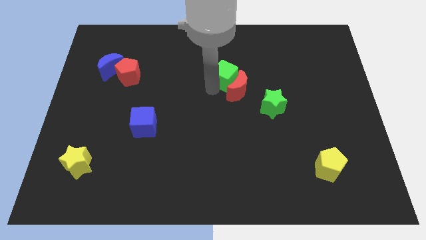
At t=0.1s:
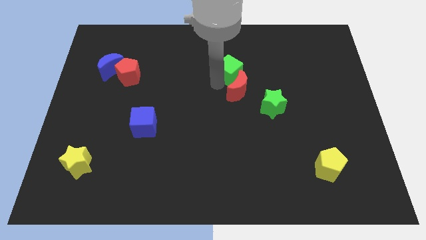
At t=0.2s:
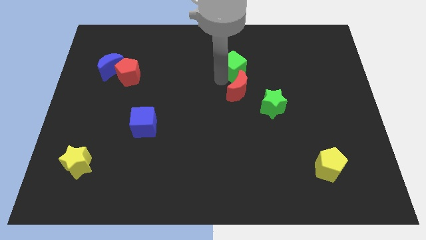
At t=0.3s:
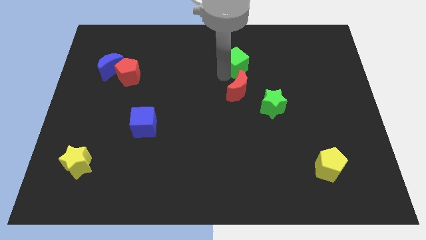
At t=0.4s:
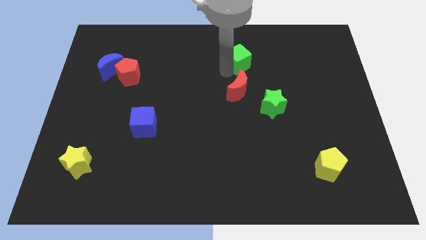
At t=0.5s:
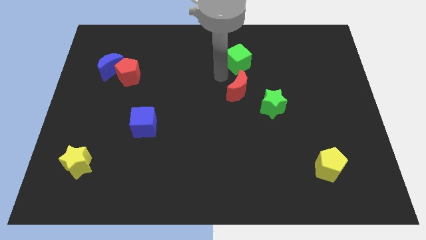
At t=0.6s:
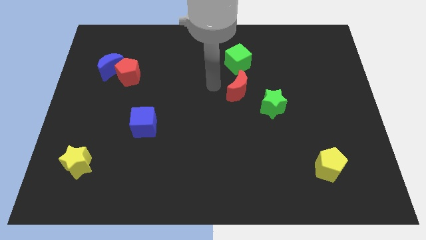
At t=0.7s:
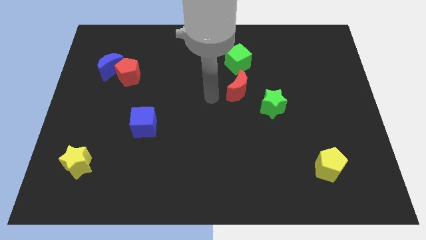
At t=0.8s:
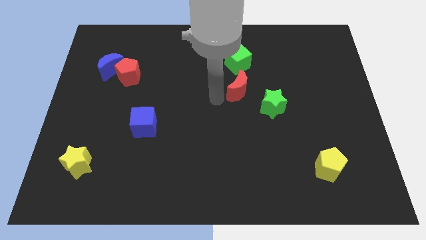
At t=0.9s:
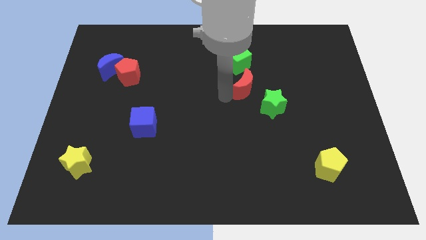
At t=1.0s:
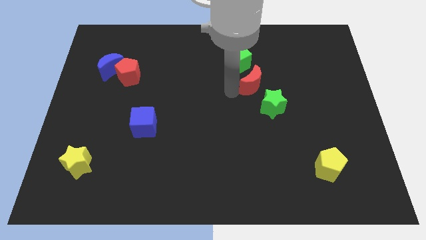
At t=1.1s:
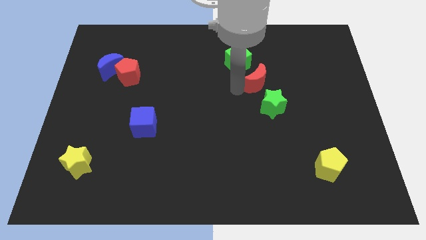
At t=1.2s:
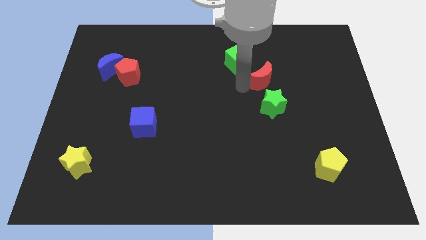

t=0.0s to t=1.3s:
put the red moon between green cube and green star diagonally

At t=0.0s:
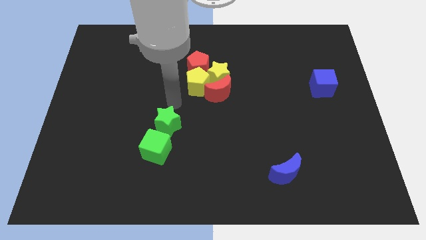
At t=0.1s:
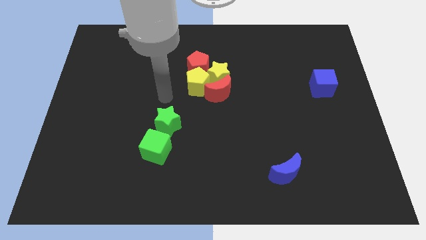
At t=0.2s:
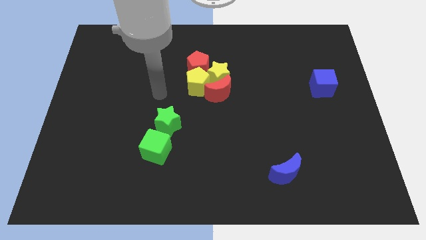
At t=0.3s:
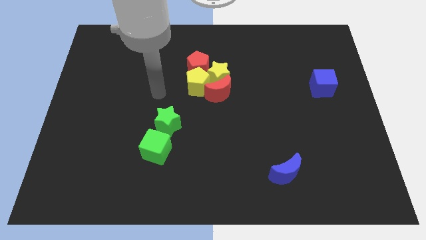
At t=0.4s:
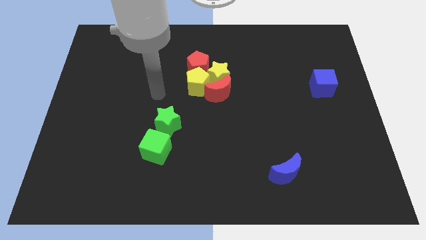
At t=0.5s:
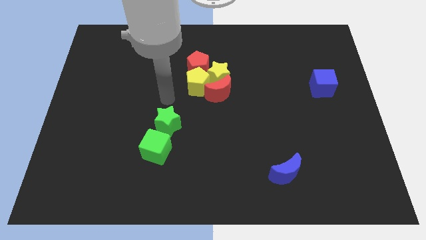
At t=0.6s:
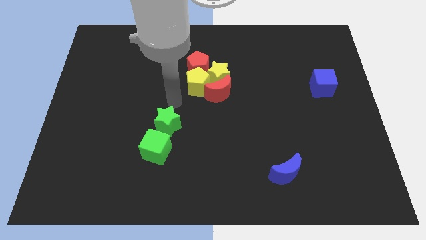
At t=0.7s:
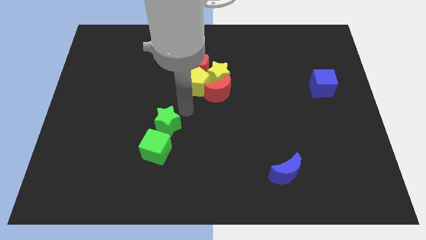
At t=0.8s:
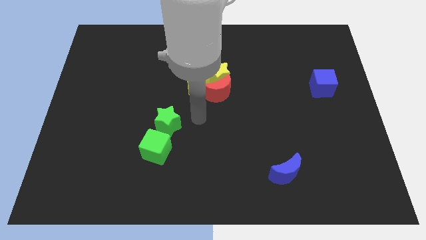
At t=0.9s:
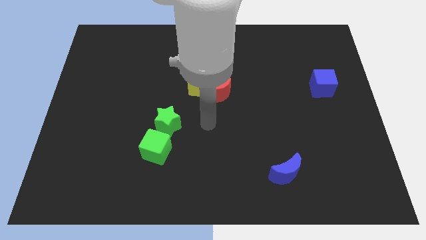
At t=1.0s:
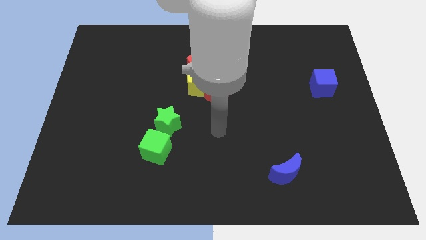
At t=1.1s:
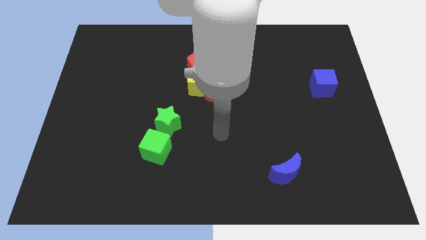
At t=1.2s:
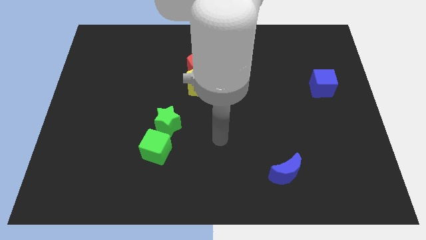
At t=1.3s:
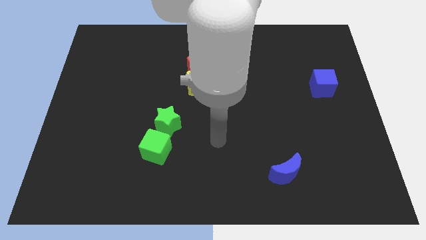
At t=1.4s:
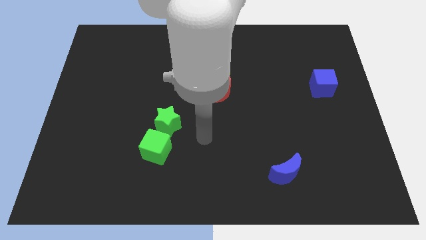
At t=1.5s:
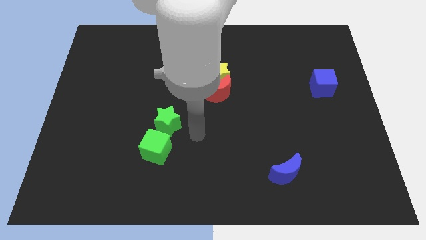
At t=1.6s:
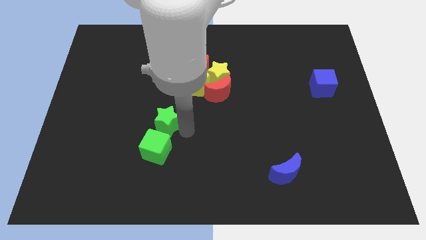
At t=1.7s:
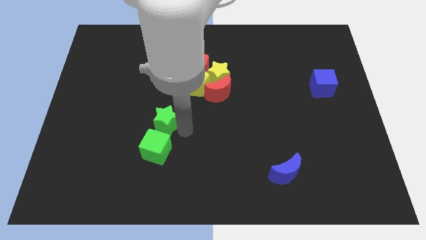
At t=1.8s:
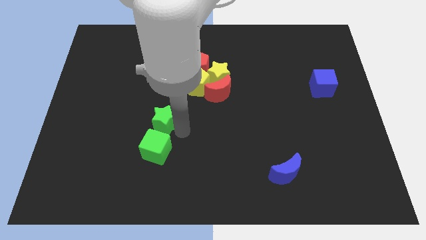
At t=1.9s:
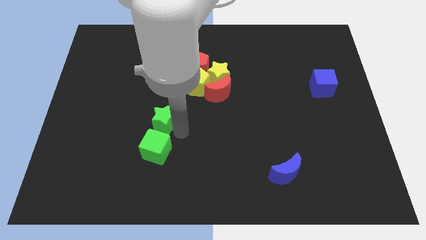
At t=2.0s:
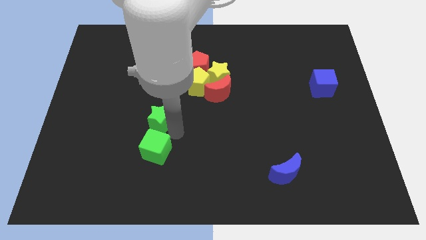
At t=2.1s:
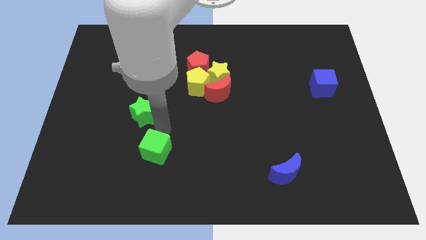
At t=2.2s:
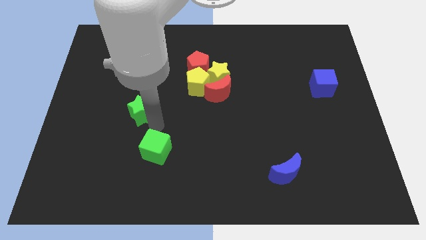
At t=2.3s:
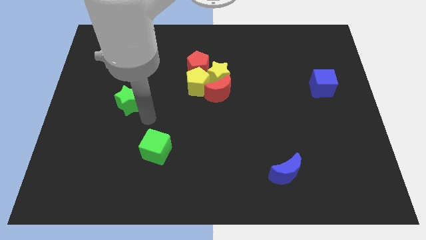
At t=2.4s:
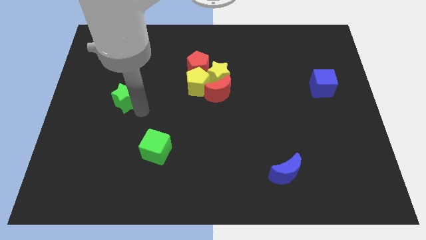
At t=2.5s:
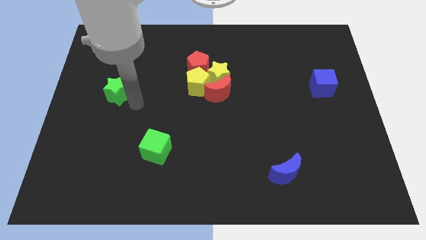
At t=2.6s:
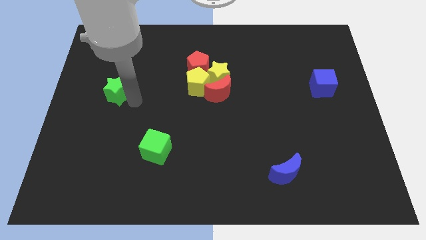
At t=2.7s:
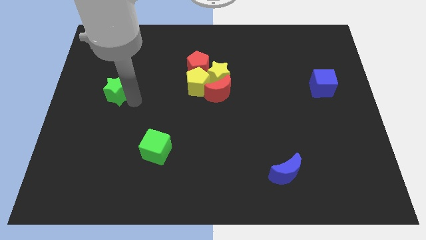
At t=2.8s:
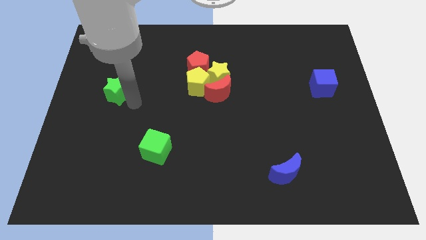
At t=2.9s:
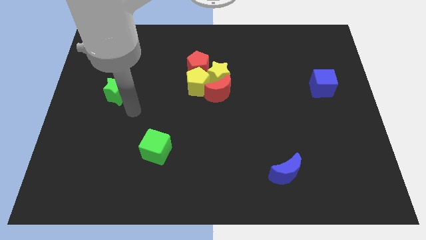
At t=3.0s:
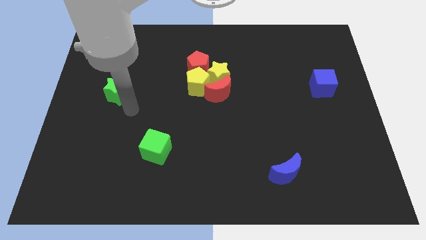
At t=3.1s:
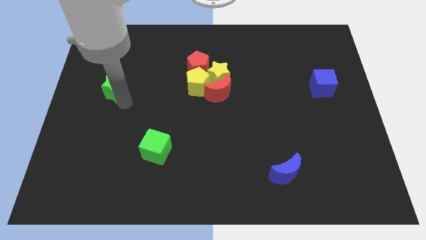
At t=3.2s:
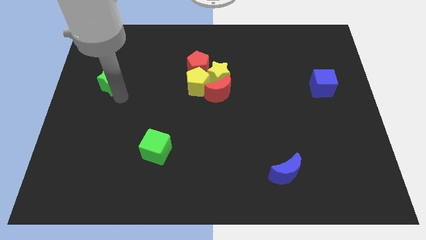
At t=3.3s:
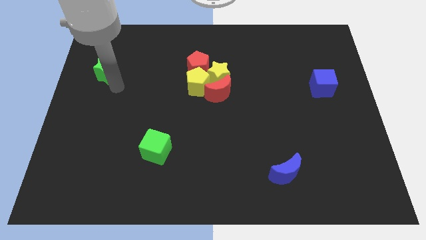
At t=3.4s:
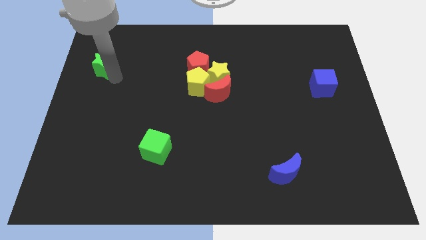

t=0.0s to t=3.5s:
separate the green star from the green cube

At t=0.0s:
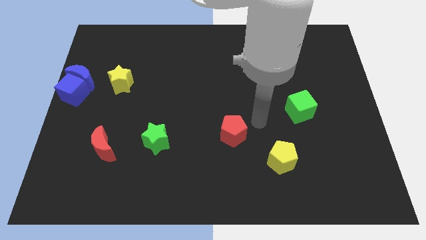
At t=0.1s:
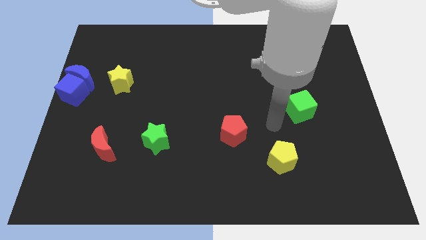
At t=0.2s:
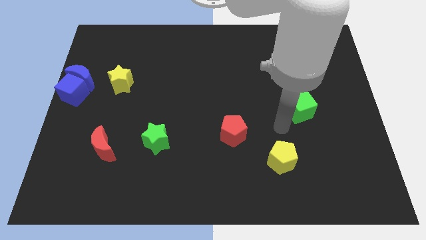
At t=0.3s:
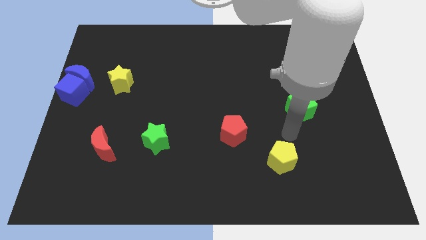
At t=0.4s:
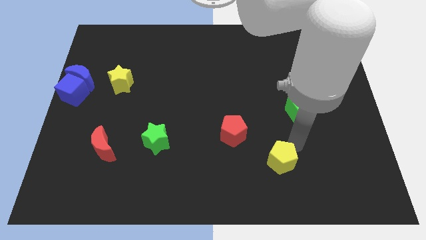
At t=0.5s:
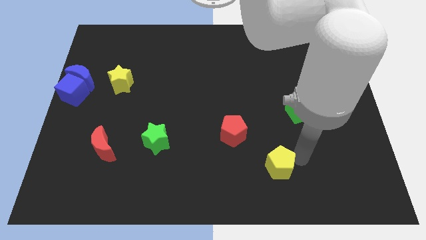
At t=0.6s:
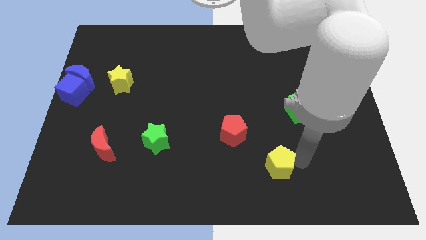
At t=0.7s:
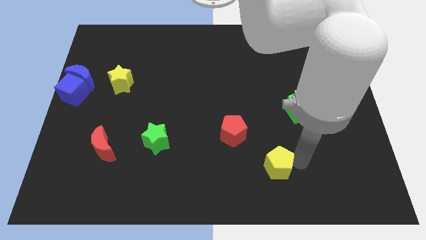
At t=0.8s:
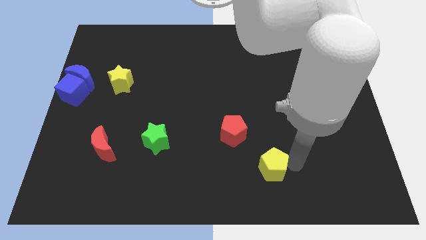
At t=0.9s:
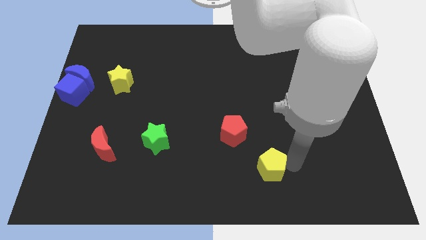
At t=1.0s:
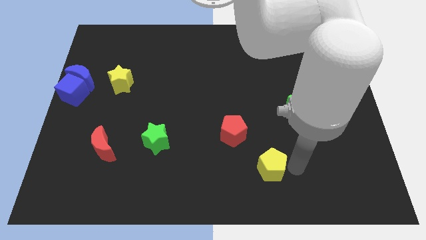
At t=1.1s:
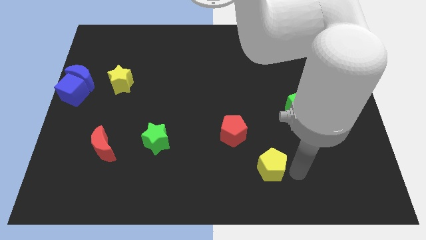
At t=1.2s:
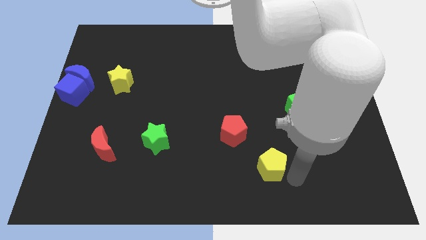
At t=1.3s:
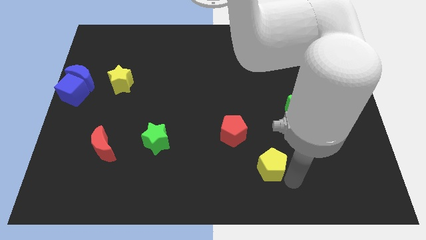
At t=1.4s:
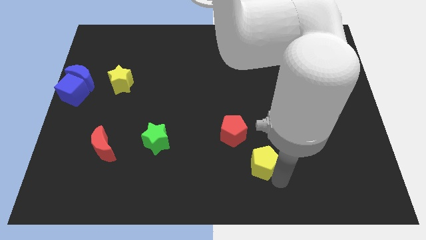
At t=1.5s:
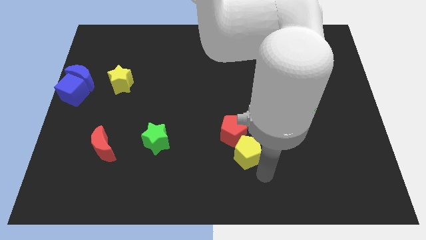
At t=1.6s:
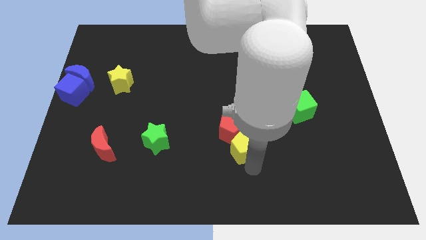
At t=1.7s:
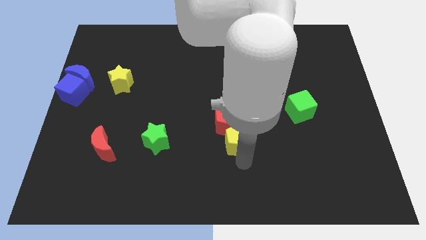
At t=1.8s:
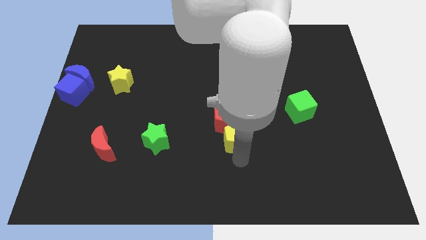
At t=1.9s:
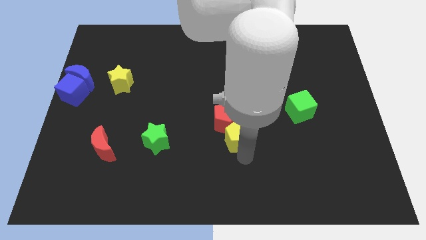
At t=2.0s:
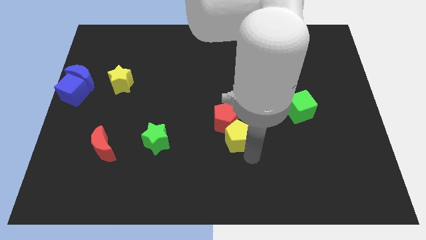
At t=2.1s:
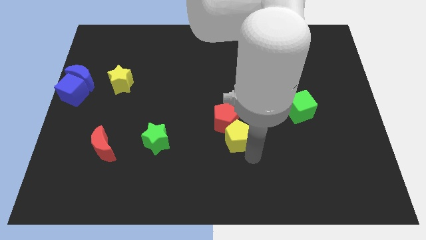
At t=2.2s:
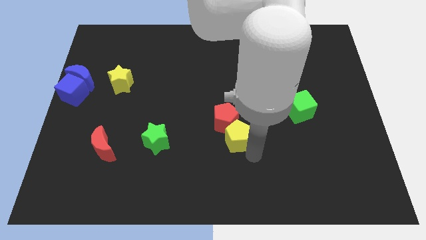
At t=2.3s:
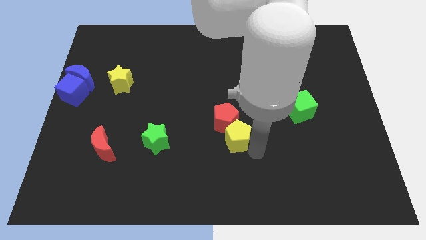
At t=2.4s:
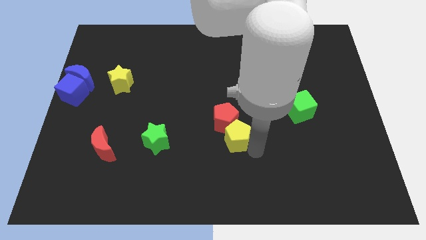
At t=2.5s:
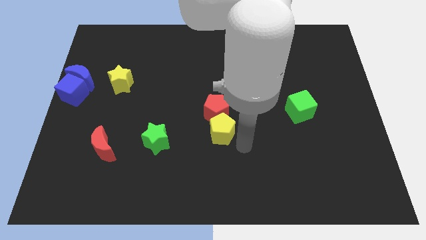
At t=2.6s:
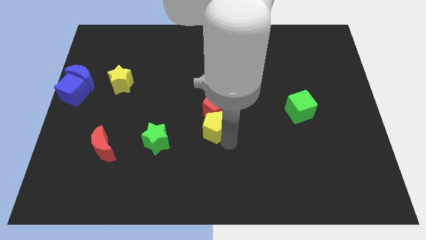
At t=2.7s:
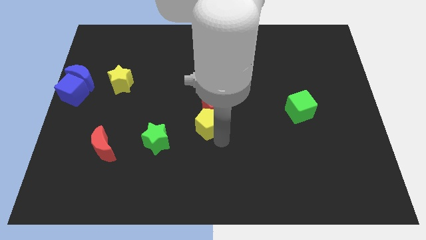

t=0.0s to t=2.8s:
place the yellow pentagon in between green star and green cube

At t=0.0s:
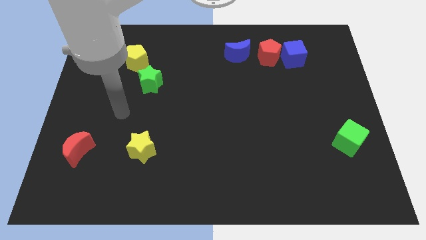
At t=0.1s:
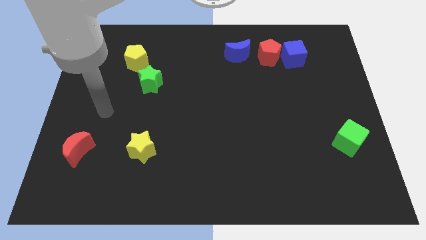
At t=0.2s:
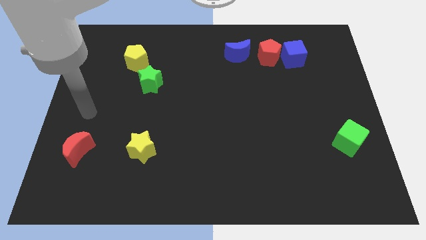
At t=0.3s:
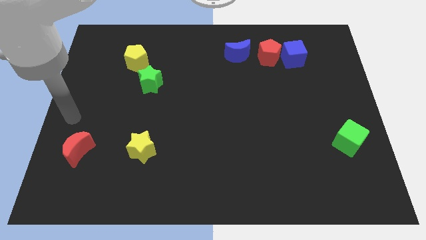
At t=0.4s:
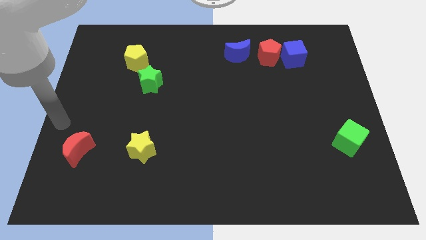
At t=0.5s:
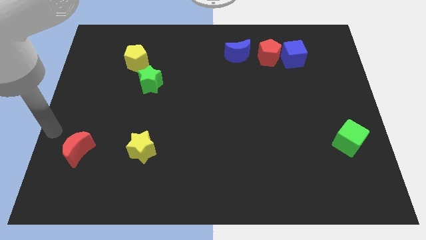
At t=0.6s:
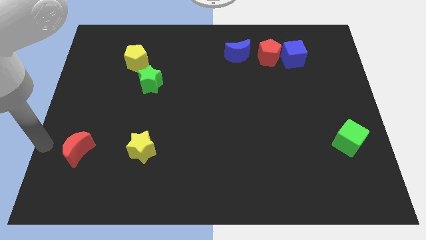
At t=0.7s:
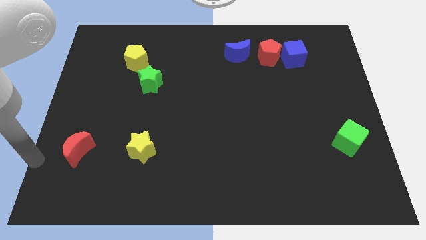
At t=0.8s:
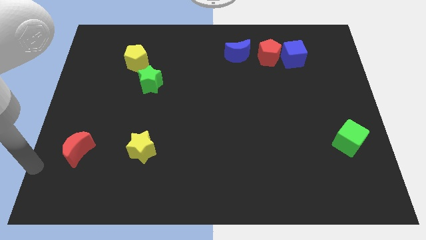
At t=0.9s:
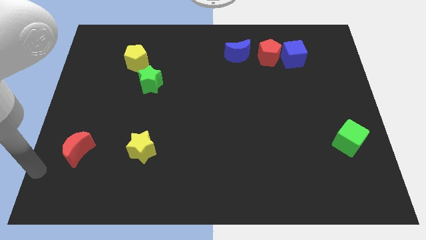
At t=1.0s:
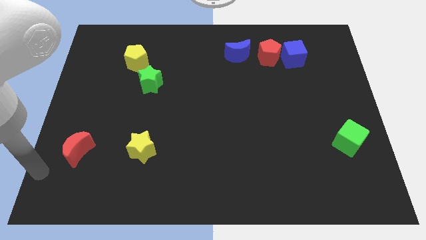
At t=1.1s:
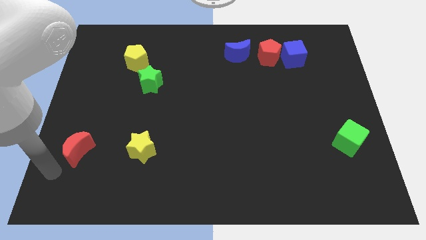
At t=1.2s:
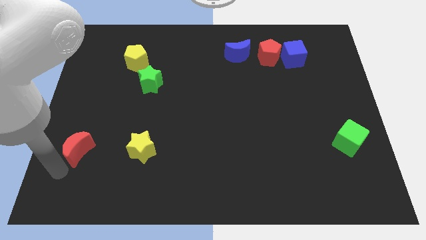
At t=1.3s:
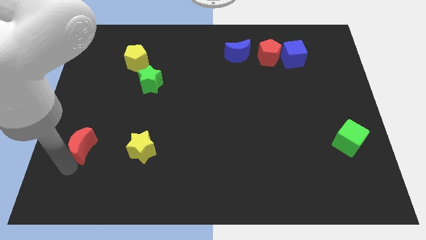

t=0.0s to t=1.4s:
tap the red crescent

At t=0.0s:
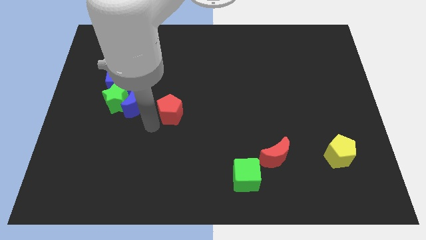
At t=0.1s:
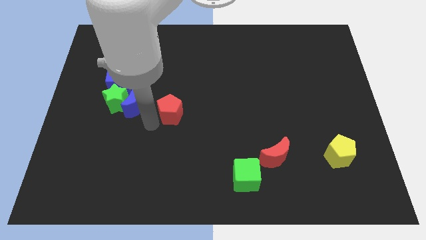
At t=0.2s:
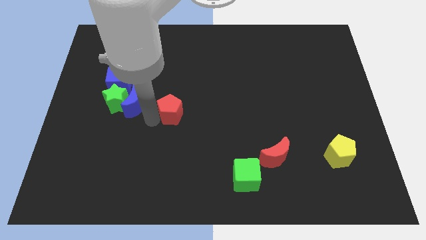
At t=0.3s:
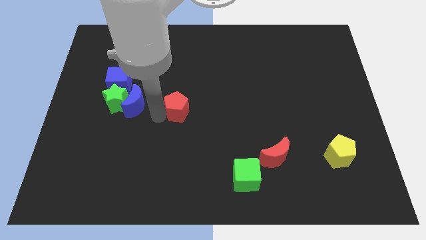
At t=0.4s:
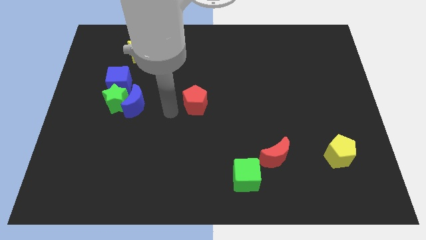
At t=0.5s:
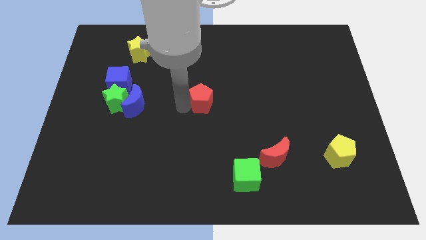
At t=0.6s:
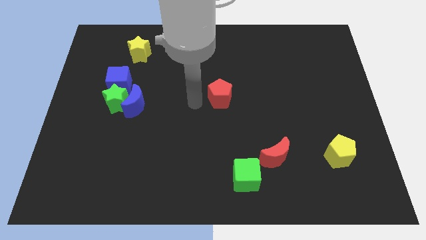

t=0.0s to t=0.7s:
push red pentagon towards center
